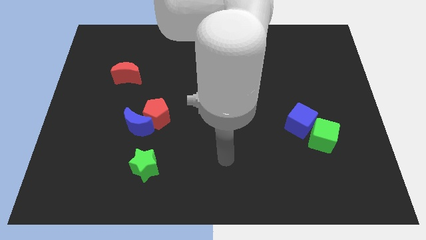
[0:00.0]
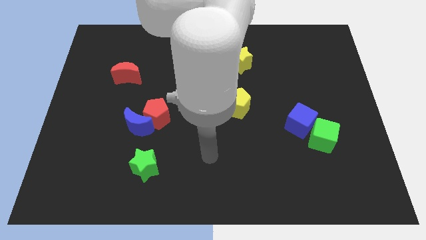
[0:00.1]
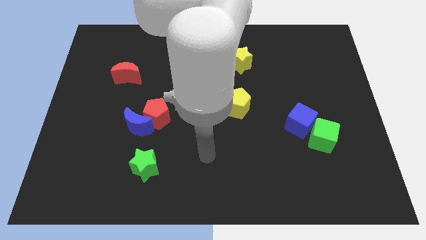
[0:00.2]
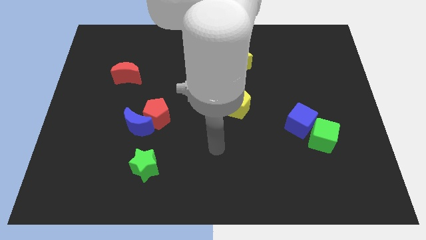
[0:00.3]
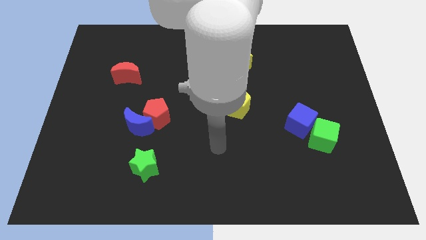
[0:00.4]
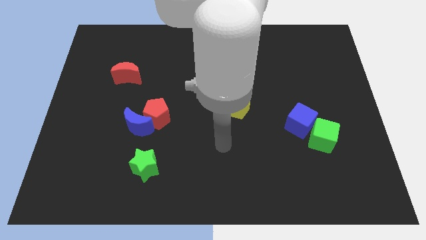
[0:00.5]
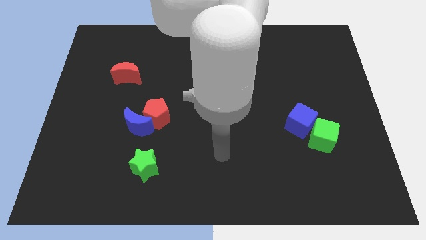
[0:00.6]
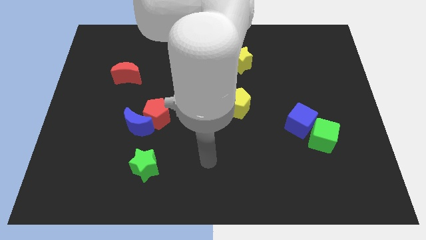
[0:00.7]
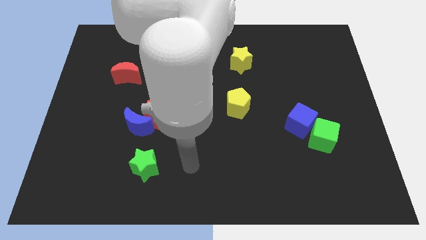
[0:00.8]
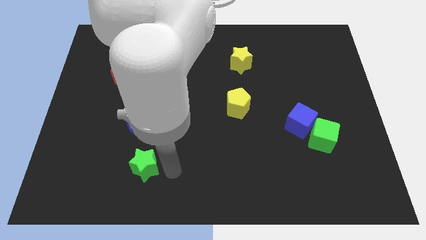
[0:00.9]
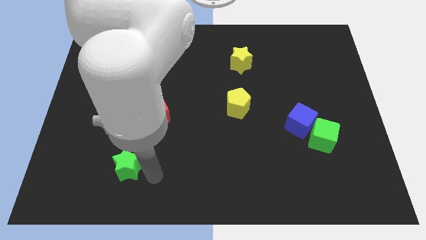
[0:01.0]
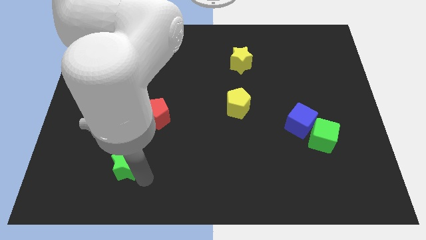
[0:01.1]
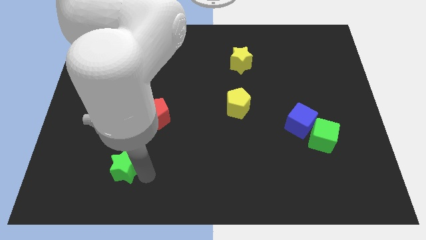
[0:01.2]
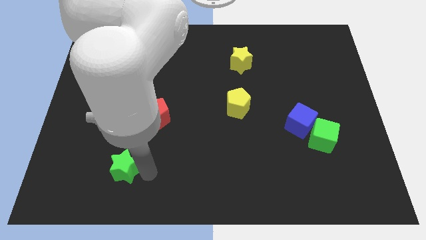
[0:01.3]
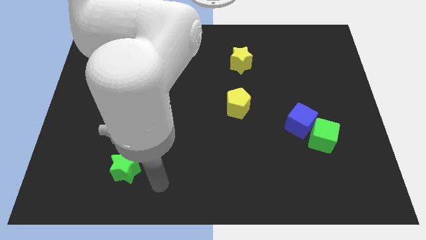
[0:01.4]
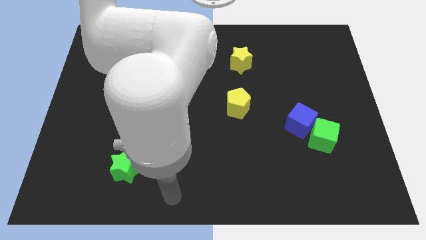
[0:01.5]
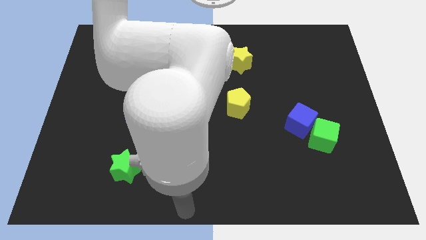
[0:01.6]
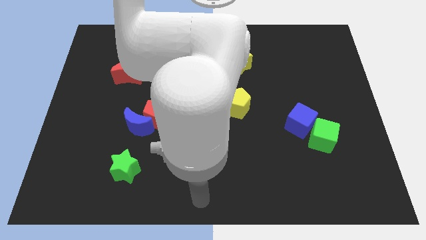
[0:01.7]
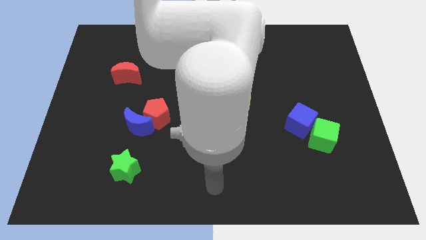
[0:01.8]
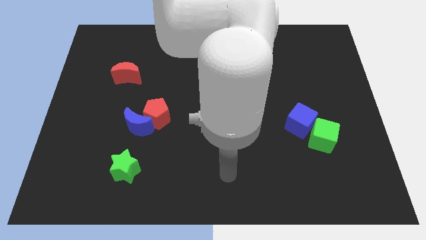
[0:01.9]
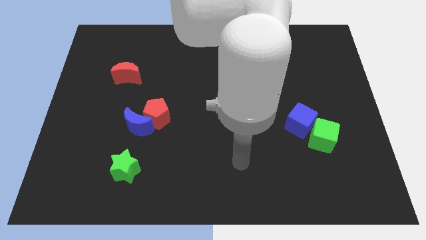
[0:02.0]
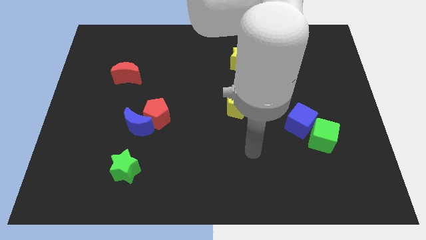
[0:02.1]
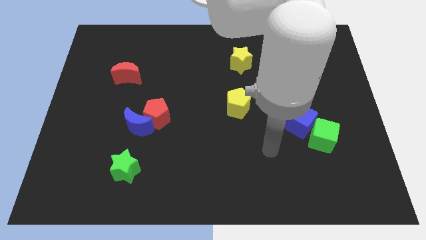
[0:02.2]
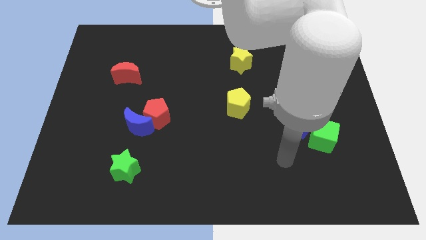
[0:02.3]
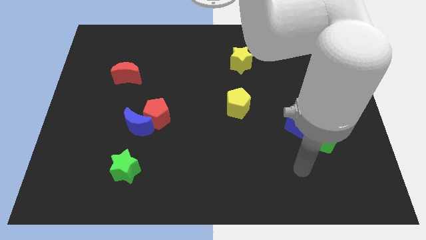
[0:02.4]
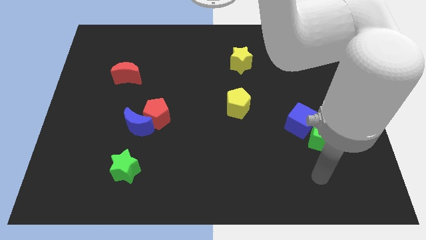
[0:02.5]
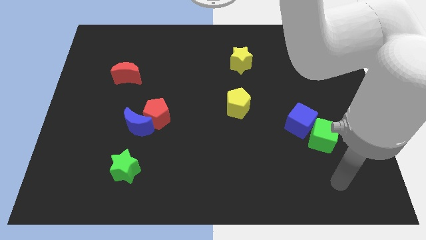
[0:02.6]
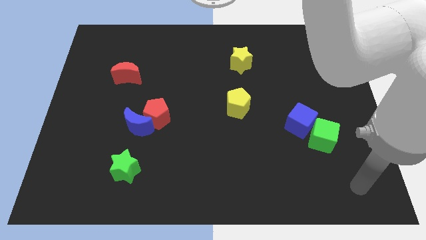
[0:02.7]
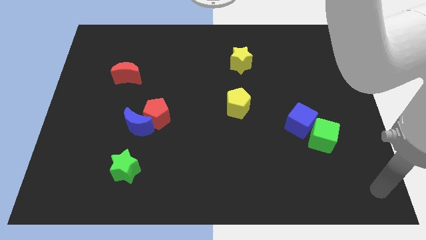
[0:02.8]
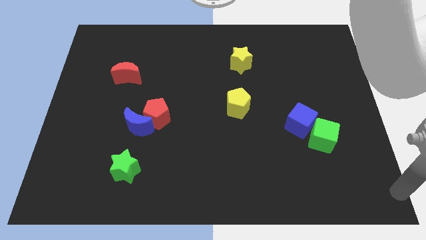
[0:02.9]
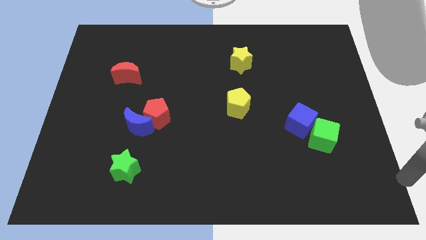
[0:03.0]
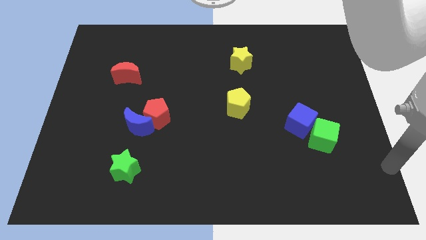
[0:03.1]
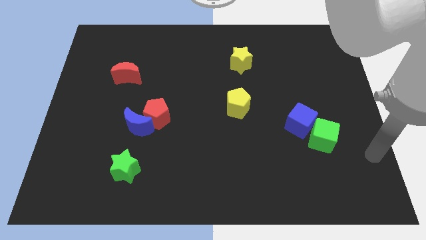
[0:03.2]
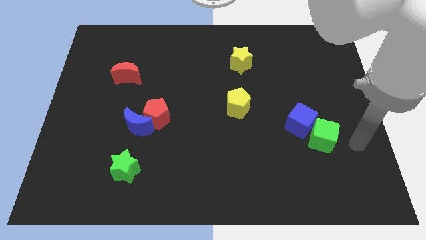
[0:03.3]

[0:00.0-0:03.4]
move the green star slightly to the left of the board

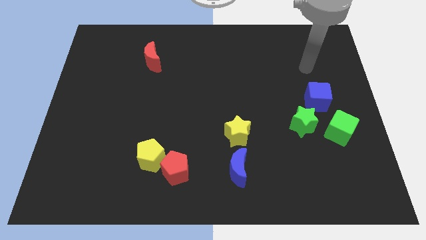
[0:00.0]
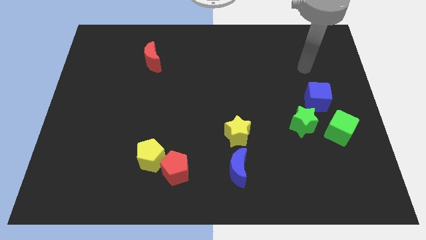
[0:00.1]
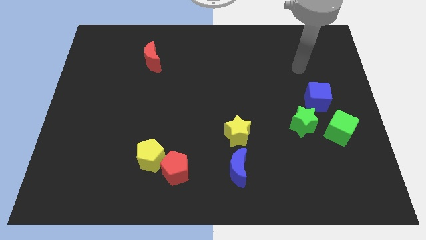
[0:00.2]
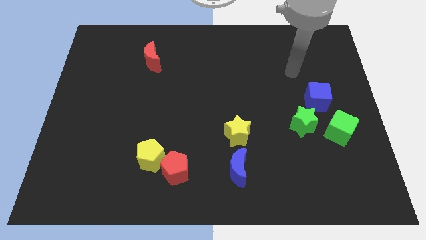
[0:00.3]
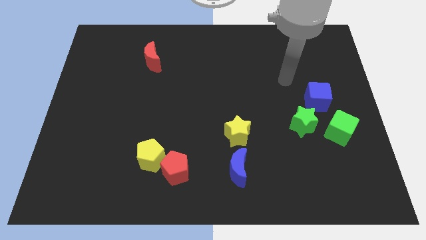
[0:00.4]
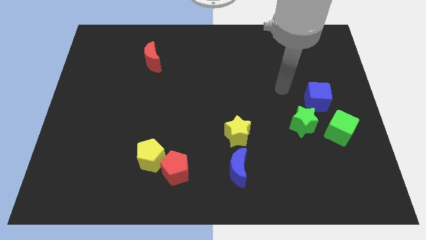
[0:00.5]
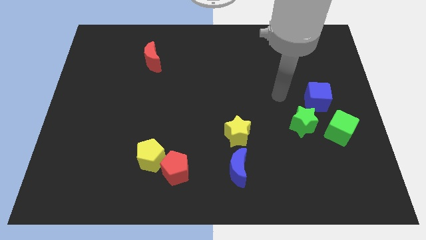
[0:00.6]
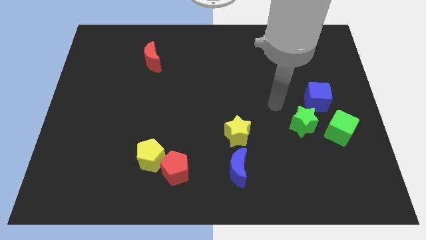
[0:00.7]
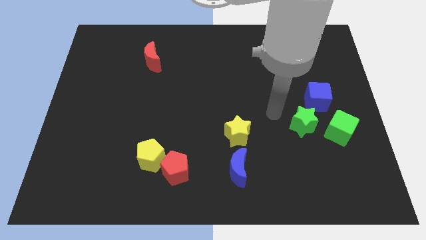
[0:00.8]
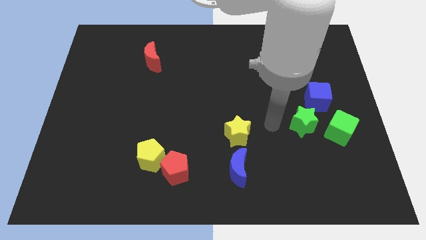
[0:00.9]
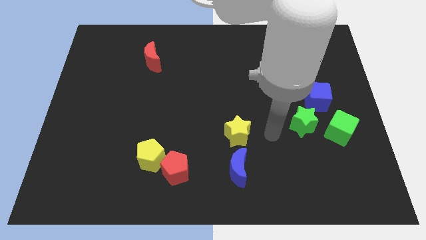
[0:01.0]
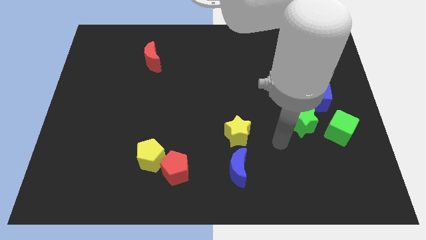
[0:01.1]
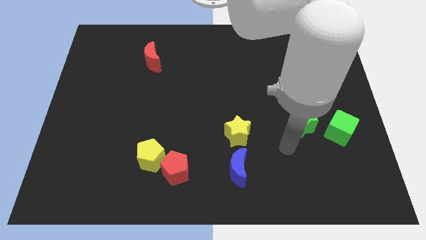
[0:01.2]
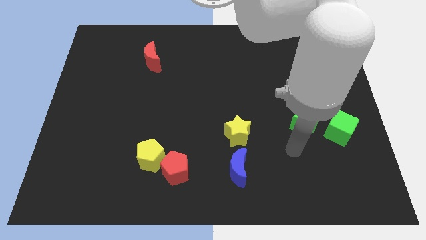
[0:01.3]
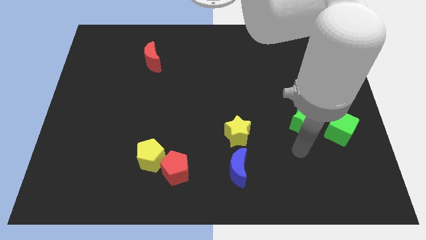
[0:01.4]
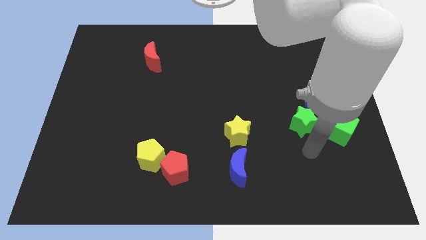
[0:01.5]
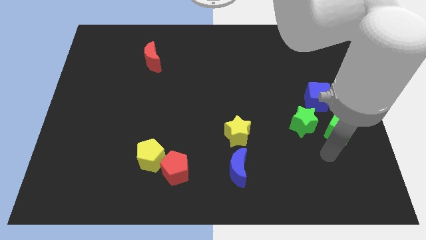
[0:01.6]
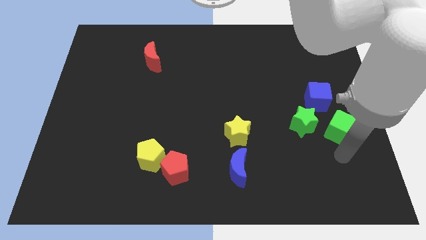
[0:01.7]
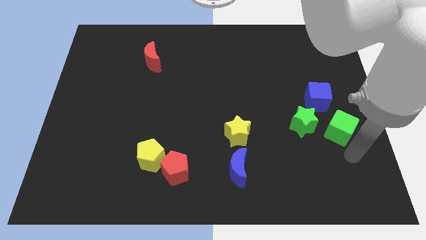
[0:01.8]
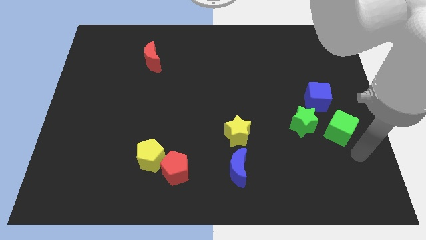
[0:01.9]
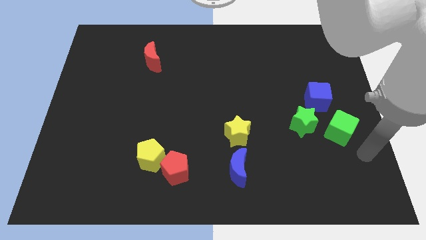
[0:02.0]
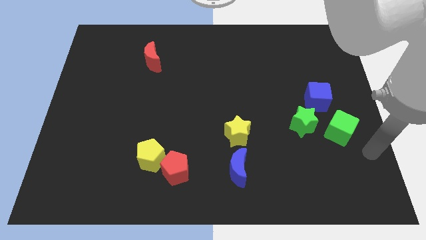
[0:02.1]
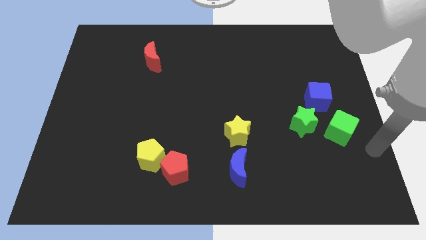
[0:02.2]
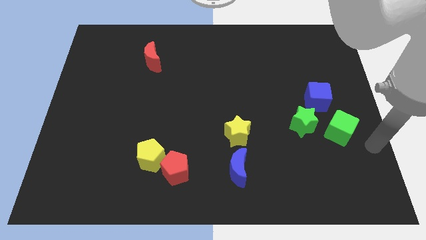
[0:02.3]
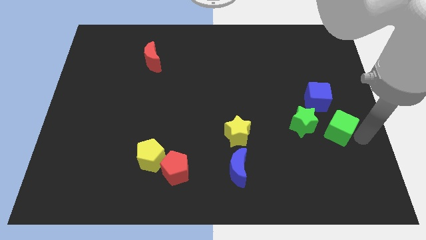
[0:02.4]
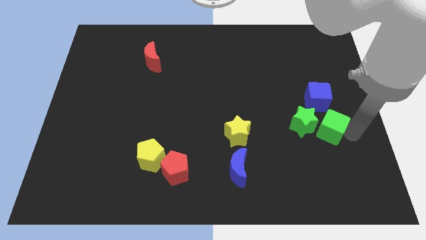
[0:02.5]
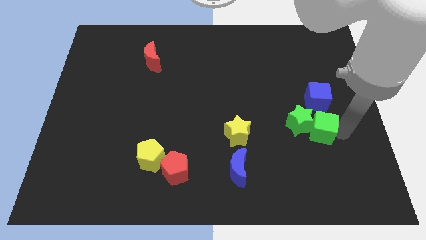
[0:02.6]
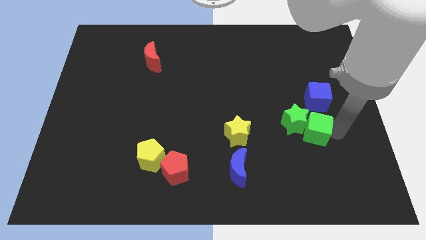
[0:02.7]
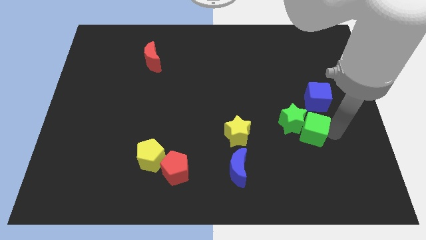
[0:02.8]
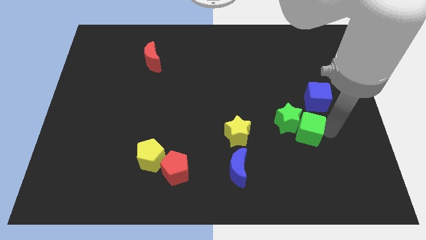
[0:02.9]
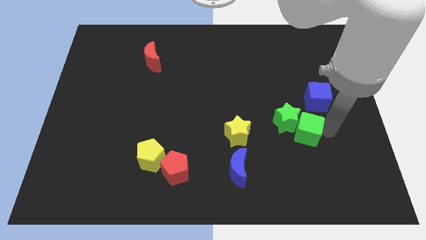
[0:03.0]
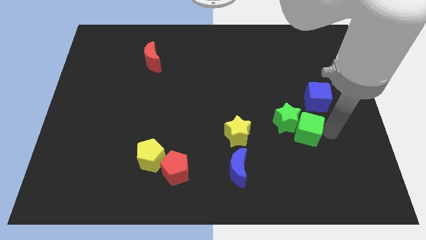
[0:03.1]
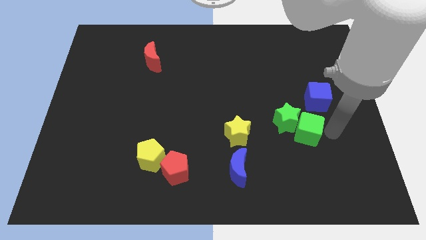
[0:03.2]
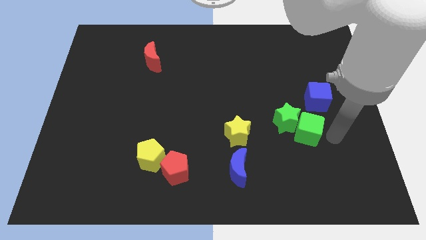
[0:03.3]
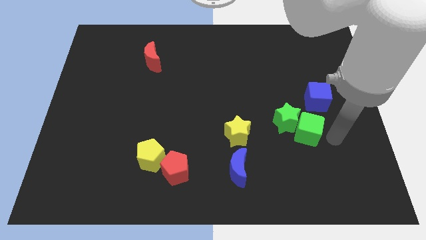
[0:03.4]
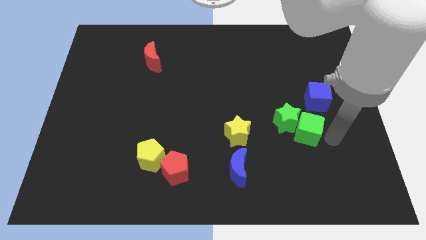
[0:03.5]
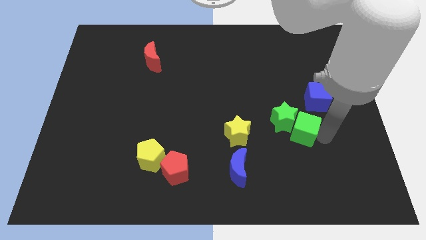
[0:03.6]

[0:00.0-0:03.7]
slightly push the green cube into green star

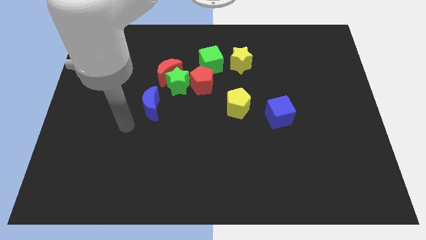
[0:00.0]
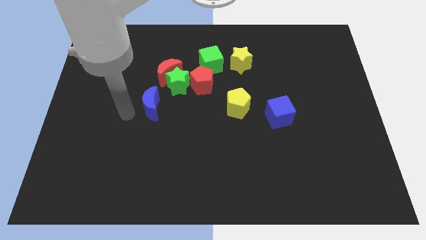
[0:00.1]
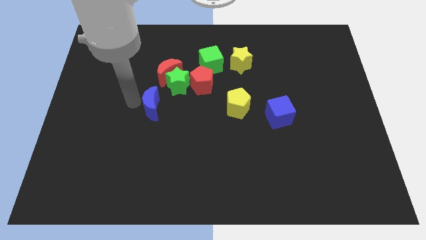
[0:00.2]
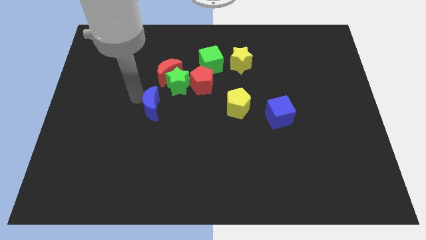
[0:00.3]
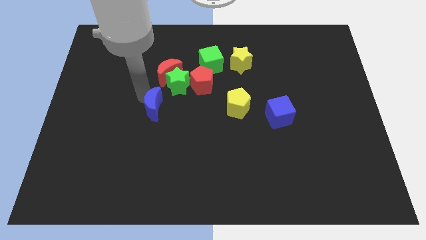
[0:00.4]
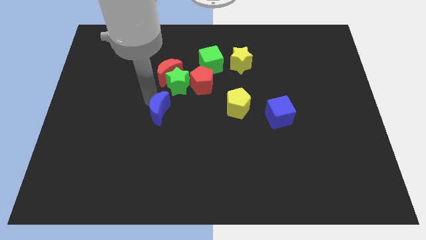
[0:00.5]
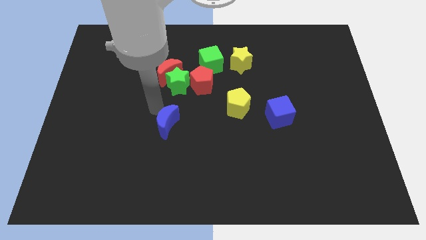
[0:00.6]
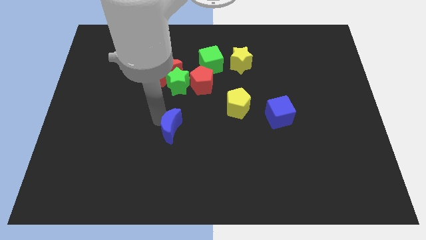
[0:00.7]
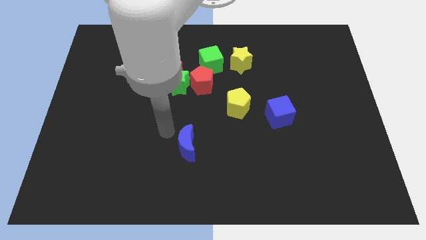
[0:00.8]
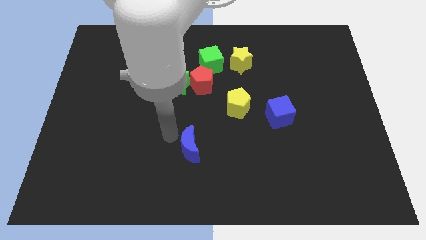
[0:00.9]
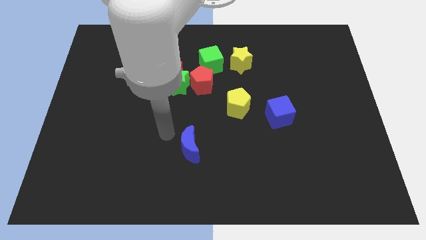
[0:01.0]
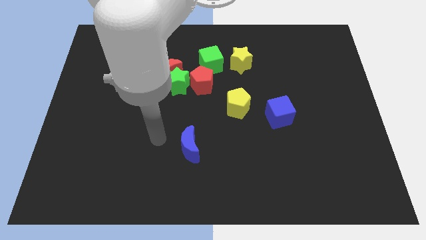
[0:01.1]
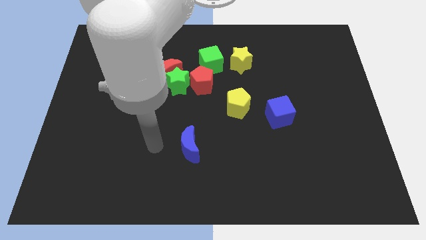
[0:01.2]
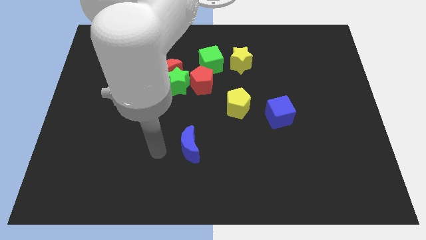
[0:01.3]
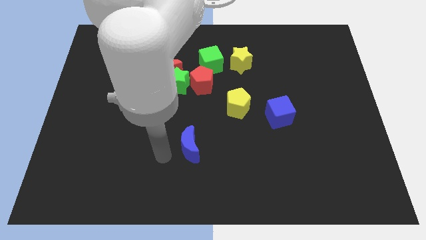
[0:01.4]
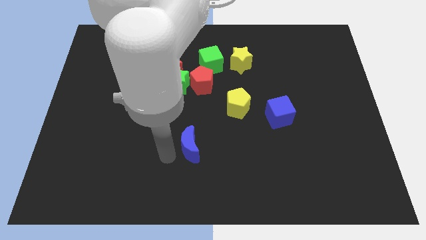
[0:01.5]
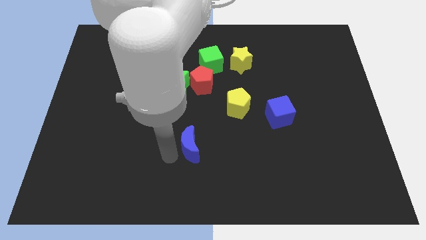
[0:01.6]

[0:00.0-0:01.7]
move the blue crescent slightly towards the bottom center of the board

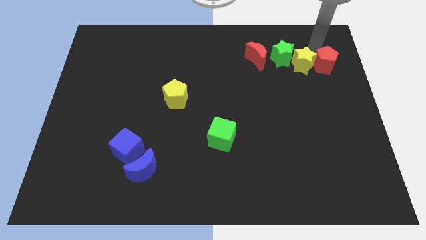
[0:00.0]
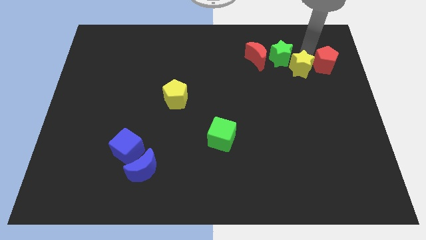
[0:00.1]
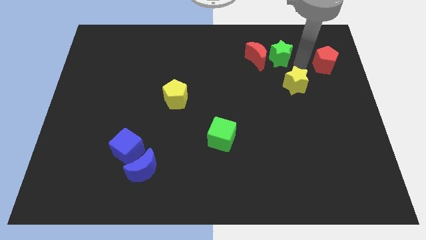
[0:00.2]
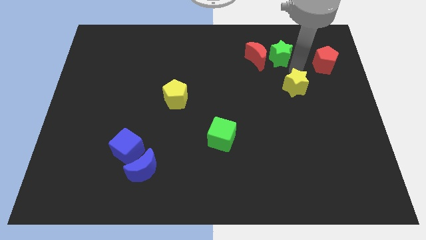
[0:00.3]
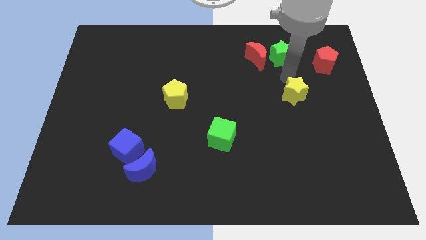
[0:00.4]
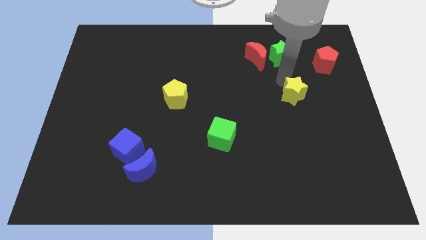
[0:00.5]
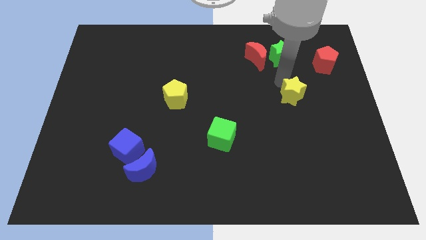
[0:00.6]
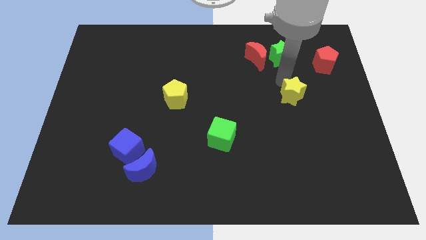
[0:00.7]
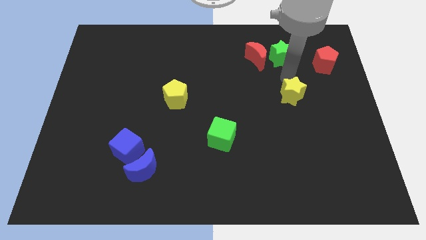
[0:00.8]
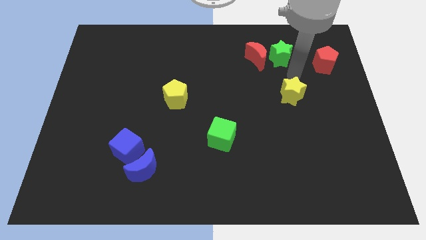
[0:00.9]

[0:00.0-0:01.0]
separate the yellow star from the red pentagon and green star
